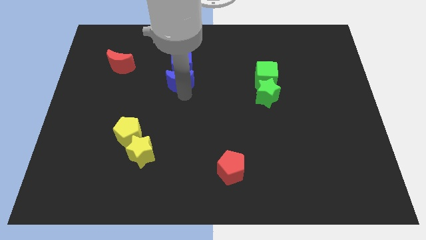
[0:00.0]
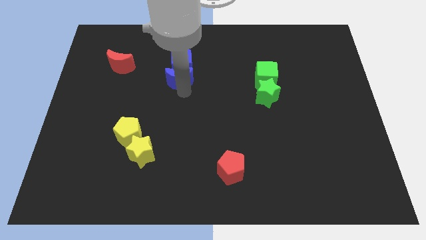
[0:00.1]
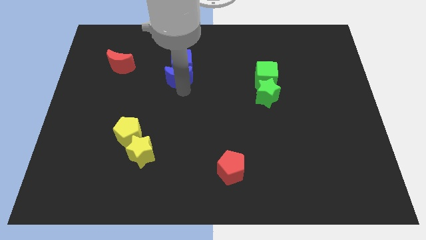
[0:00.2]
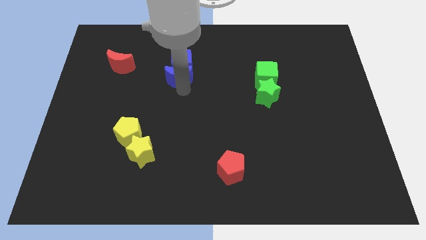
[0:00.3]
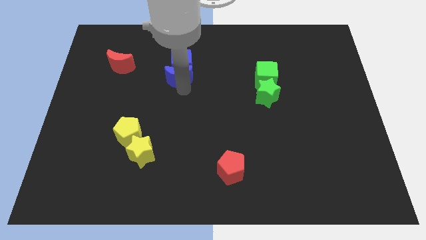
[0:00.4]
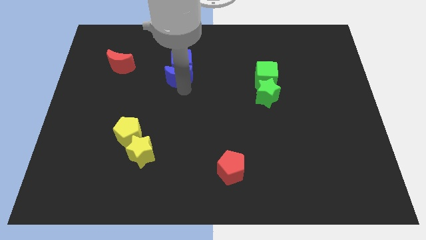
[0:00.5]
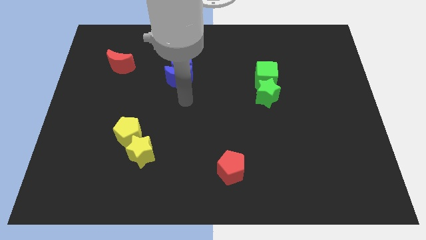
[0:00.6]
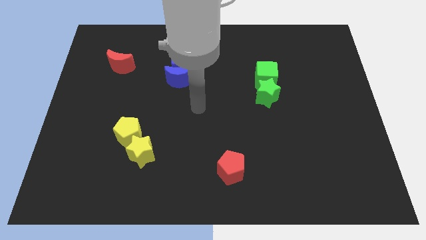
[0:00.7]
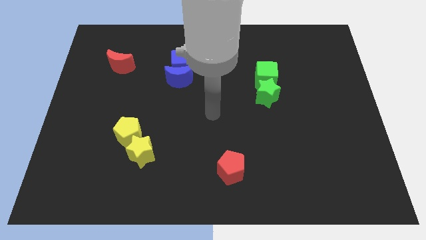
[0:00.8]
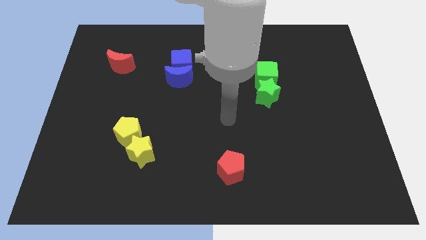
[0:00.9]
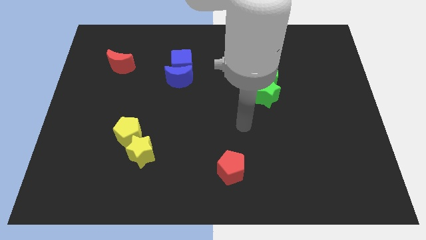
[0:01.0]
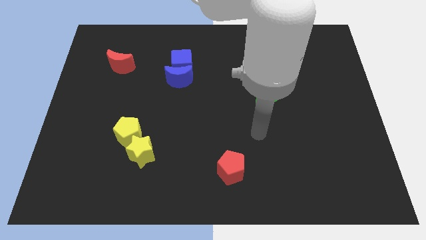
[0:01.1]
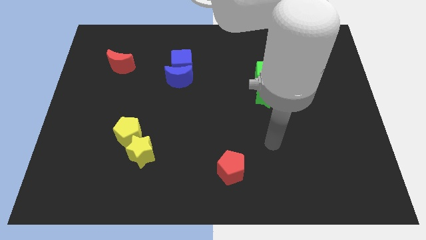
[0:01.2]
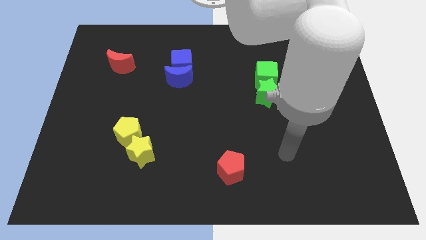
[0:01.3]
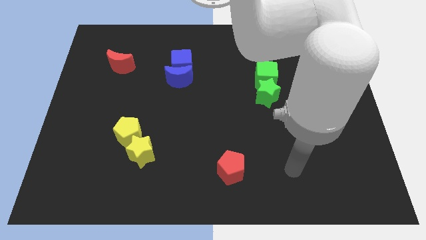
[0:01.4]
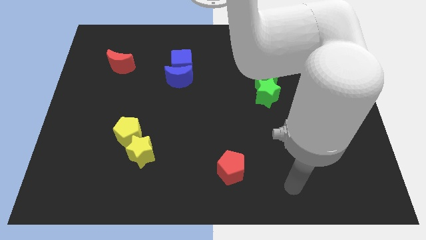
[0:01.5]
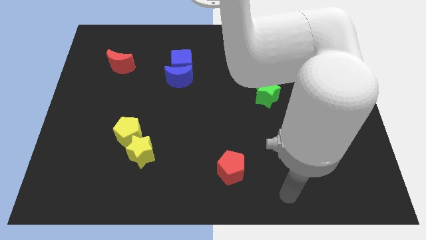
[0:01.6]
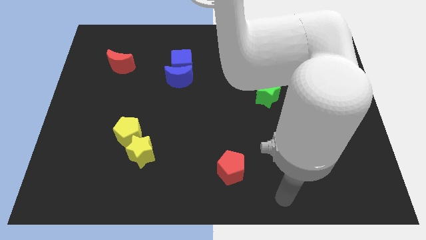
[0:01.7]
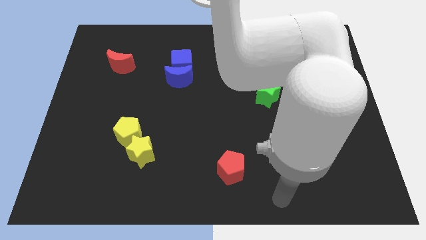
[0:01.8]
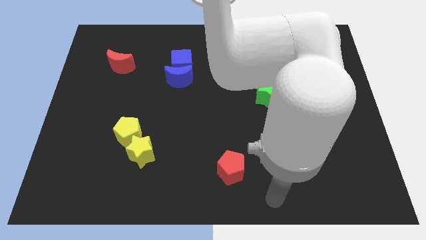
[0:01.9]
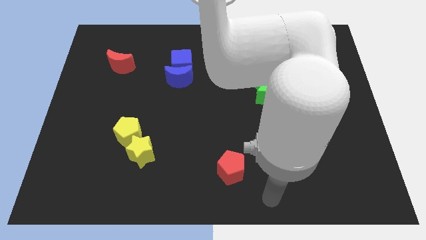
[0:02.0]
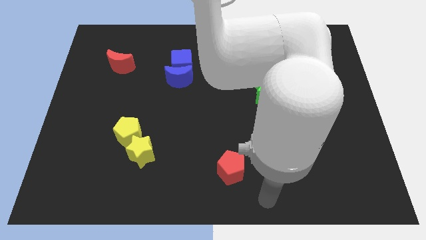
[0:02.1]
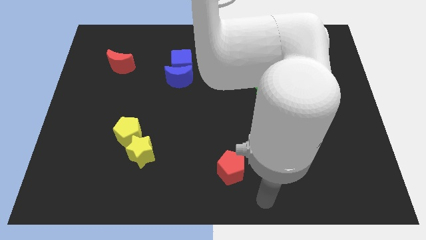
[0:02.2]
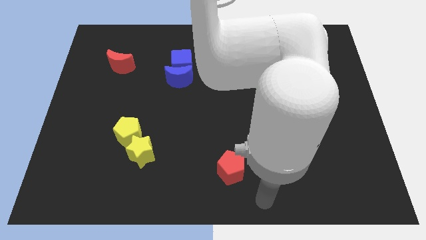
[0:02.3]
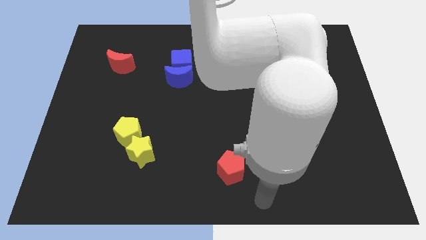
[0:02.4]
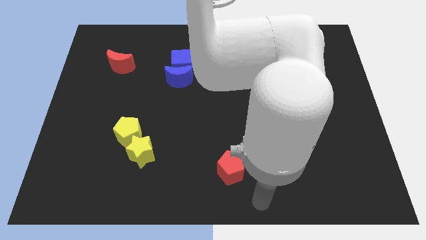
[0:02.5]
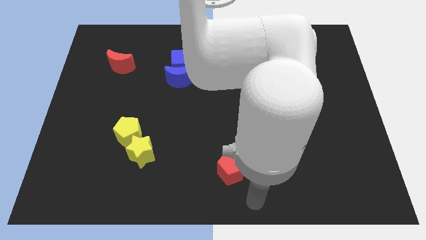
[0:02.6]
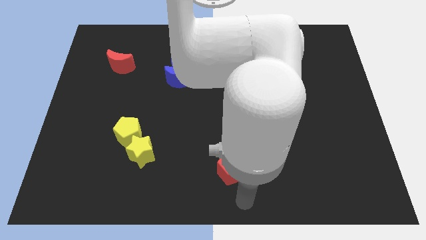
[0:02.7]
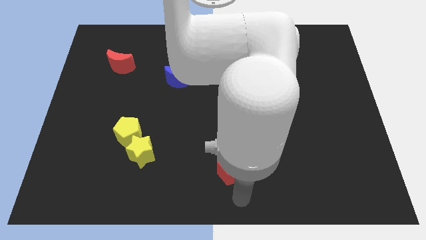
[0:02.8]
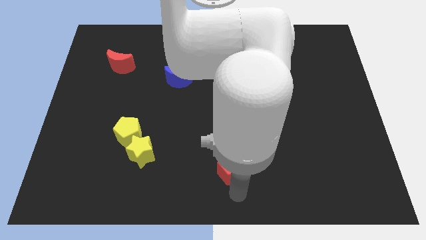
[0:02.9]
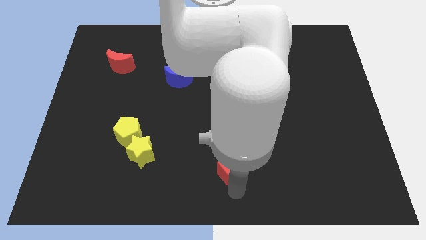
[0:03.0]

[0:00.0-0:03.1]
point your arm at the bottom of red pentagon

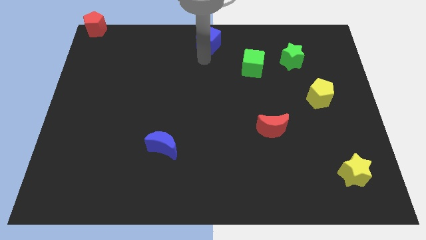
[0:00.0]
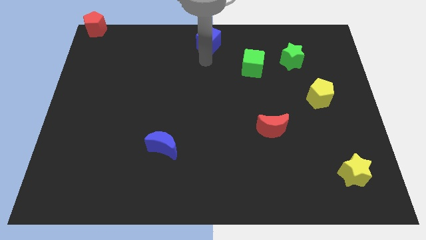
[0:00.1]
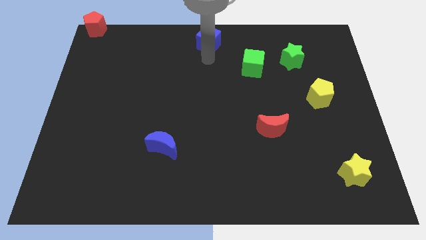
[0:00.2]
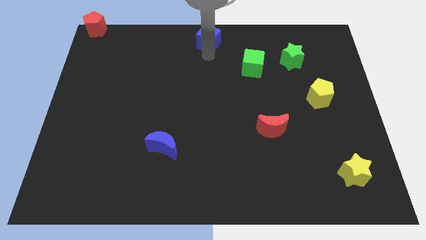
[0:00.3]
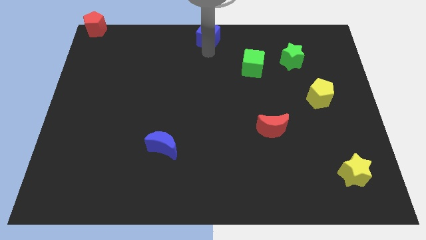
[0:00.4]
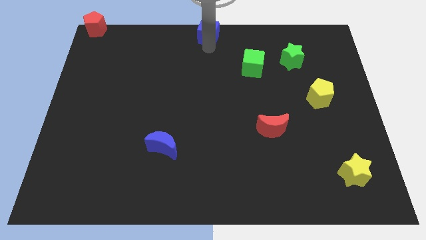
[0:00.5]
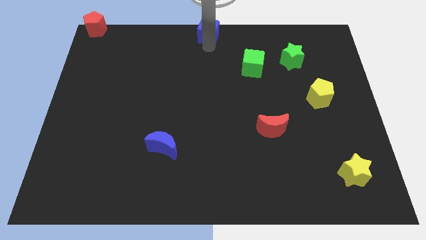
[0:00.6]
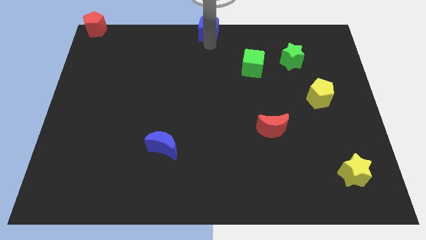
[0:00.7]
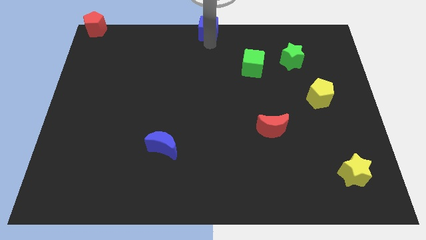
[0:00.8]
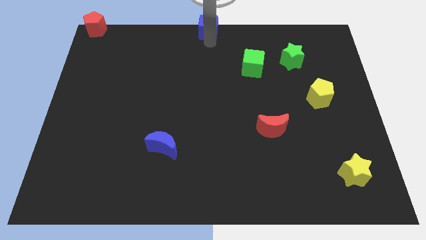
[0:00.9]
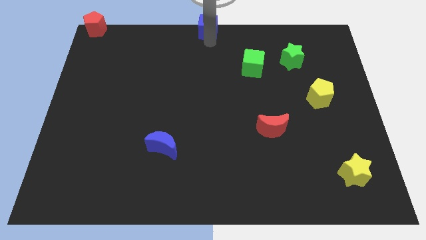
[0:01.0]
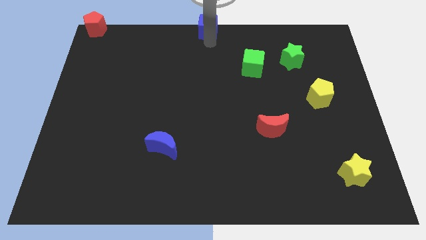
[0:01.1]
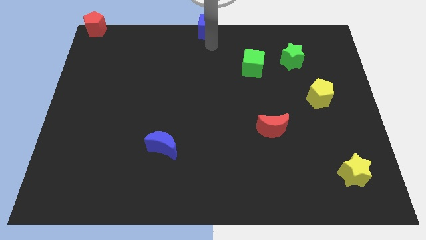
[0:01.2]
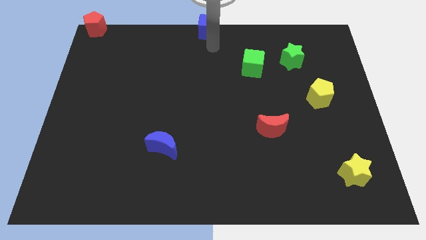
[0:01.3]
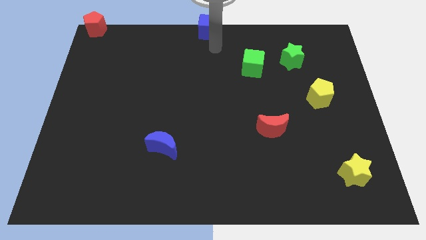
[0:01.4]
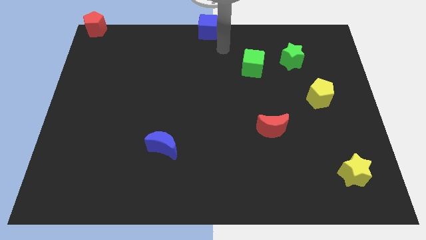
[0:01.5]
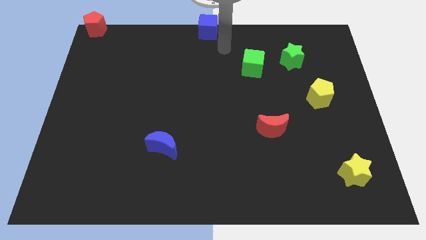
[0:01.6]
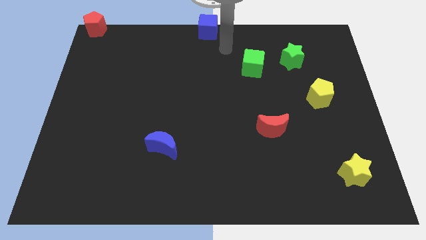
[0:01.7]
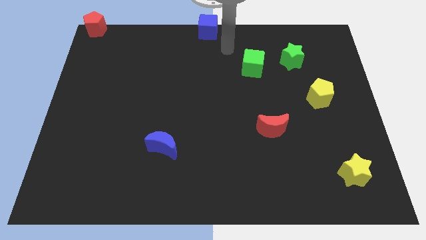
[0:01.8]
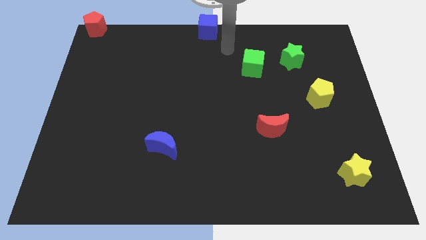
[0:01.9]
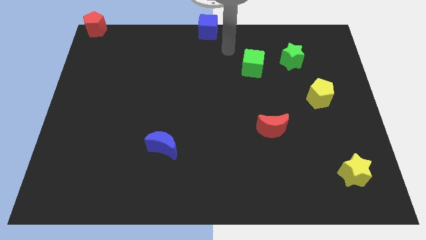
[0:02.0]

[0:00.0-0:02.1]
place the blue cube on the top center of the board

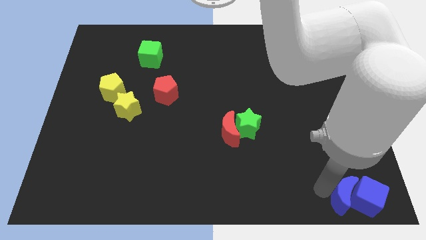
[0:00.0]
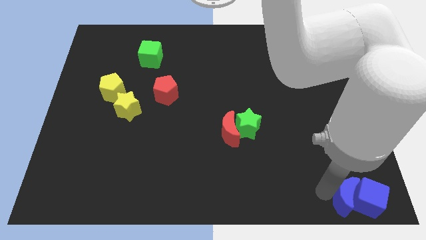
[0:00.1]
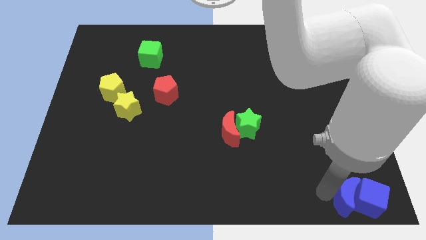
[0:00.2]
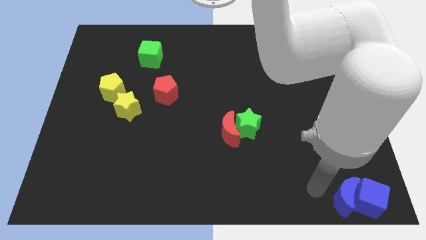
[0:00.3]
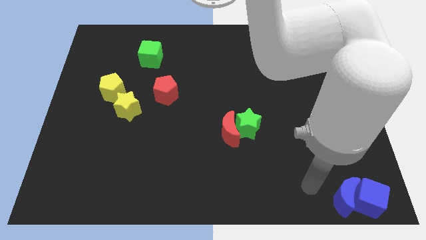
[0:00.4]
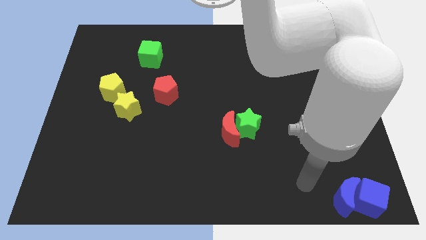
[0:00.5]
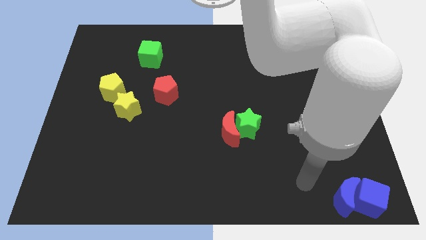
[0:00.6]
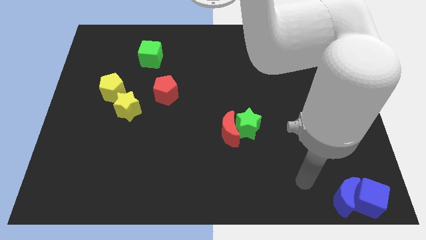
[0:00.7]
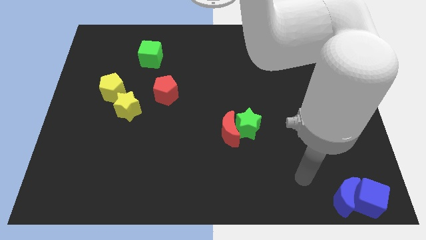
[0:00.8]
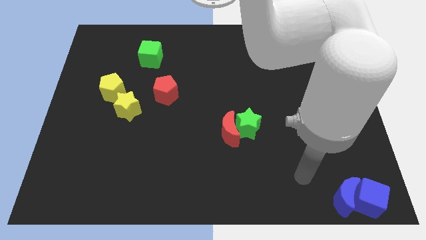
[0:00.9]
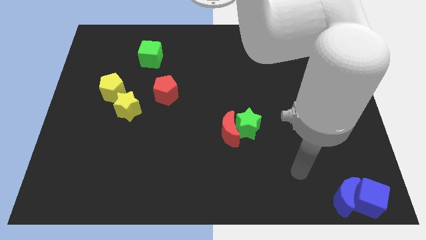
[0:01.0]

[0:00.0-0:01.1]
move your arm away from the blue moon

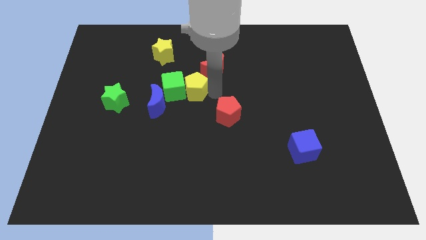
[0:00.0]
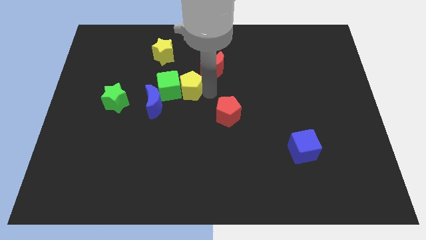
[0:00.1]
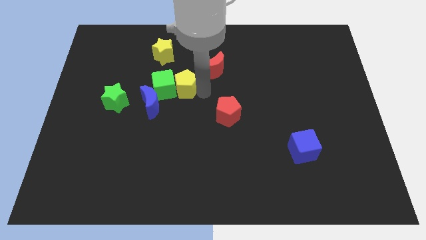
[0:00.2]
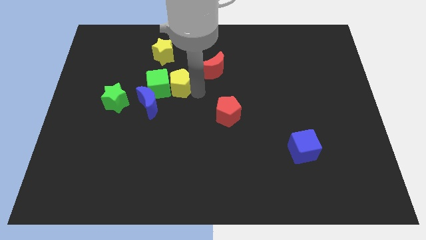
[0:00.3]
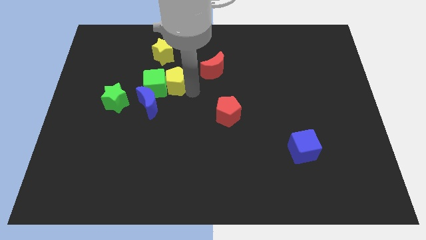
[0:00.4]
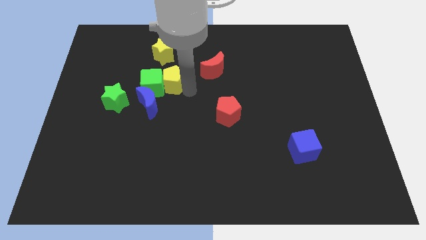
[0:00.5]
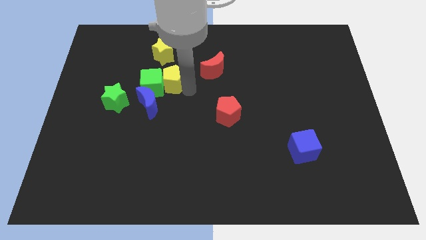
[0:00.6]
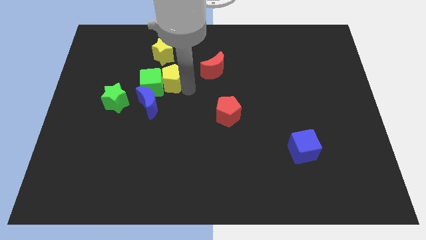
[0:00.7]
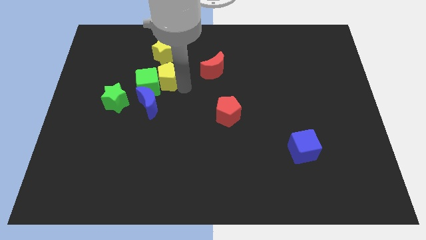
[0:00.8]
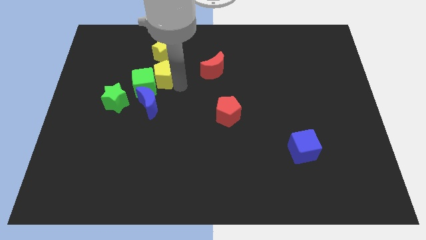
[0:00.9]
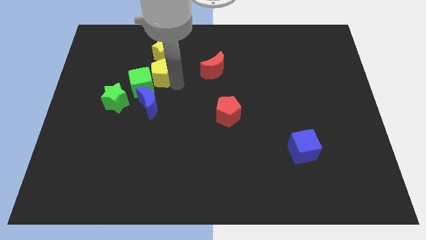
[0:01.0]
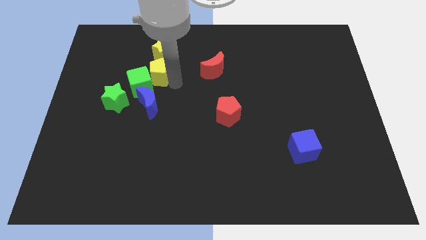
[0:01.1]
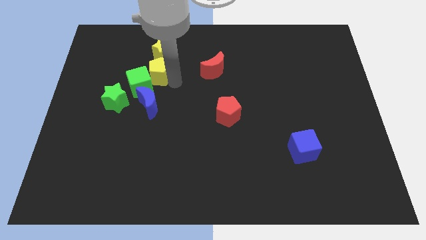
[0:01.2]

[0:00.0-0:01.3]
move the yellow pentagon into the green cube

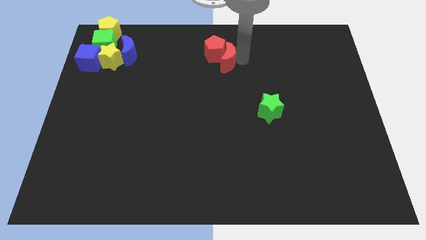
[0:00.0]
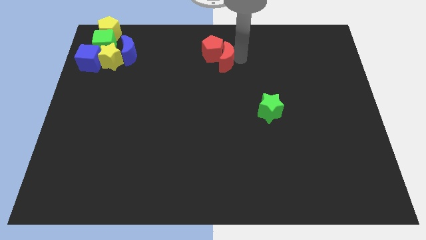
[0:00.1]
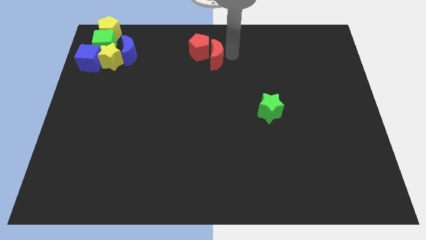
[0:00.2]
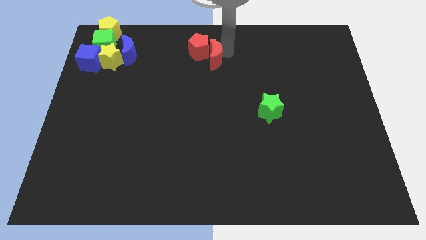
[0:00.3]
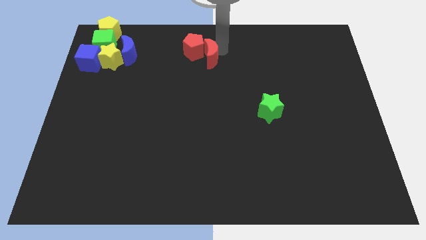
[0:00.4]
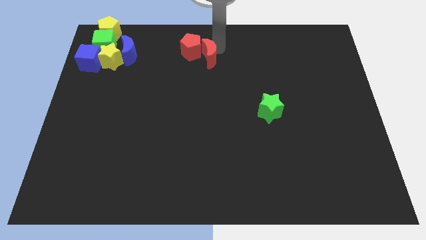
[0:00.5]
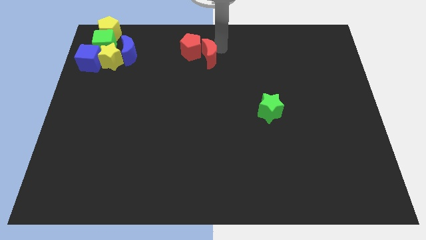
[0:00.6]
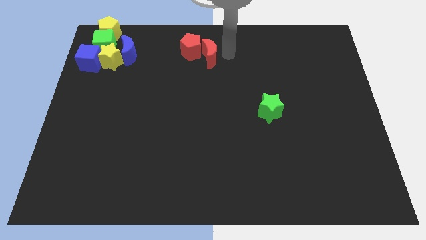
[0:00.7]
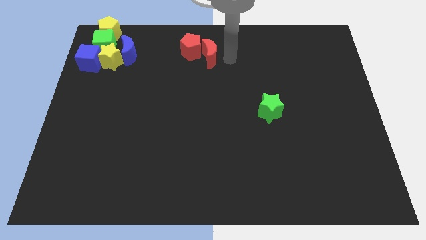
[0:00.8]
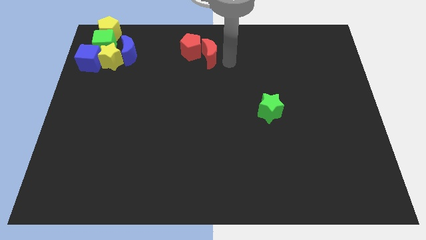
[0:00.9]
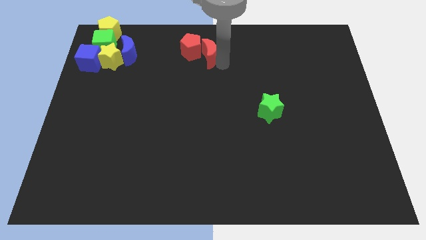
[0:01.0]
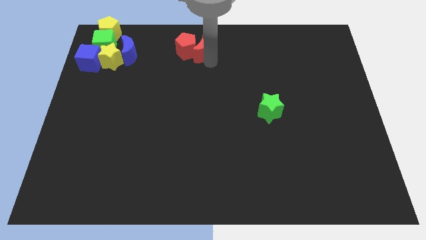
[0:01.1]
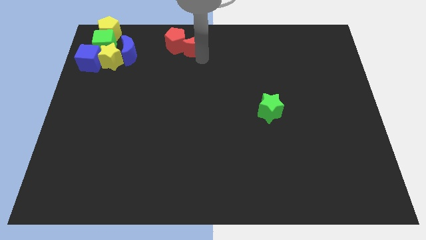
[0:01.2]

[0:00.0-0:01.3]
push the red pentaton and red crescent towards the group of blocks
